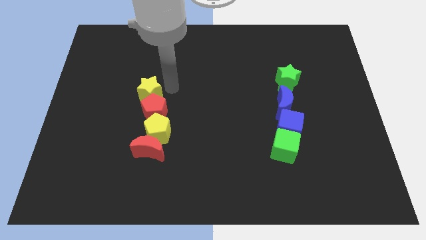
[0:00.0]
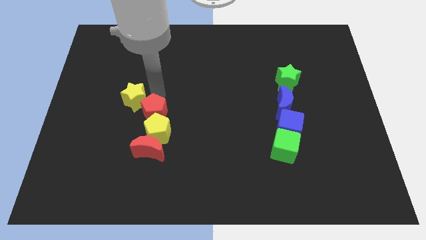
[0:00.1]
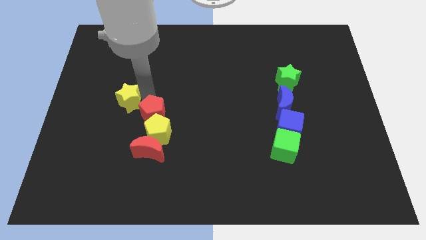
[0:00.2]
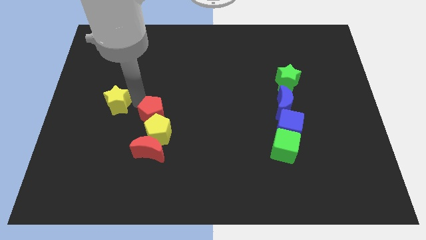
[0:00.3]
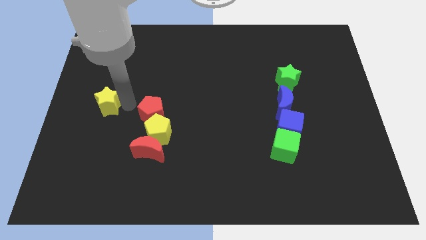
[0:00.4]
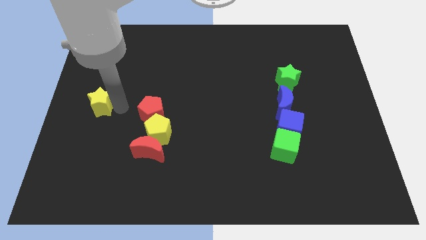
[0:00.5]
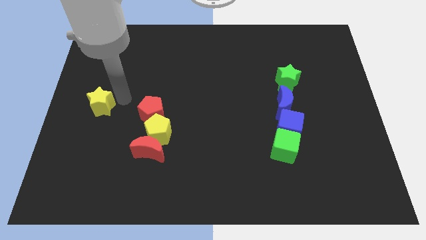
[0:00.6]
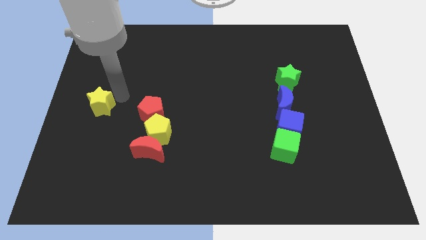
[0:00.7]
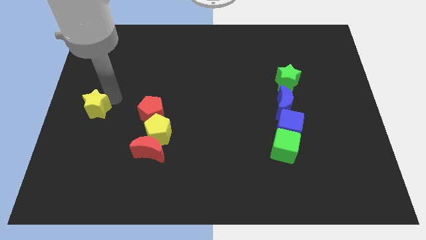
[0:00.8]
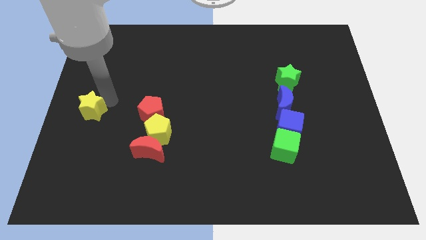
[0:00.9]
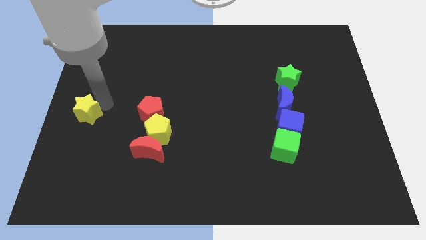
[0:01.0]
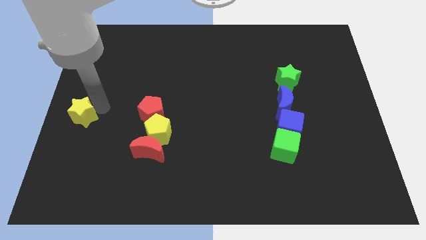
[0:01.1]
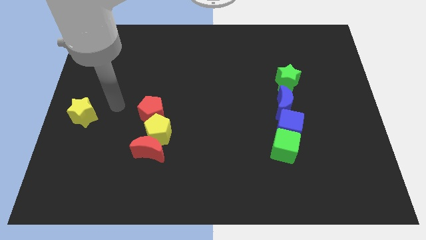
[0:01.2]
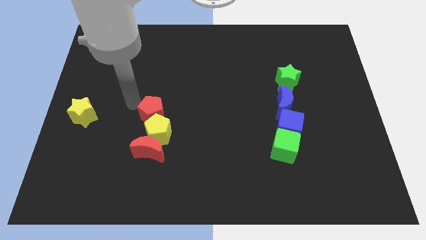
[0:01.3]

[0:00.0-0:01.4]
place the yellow star left to the red pentagon

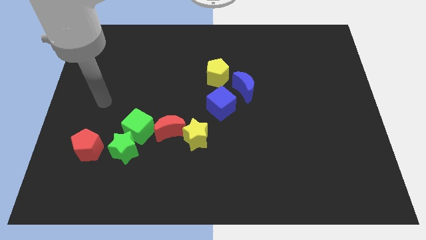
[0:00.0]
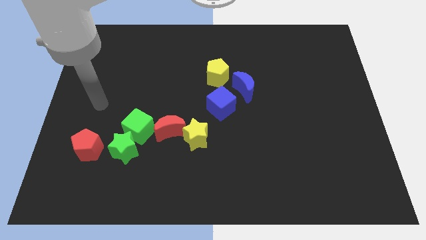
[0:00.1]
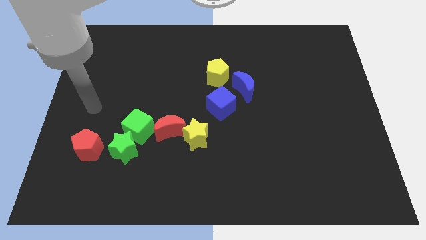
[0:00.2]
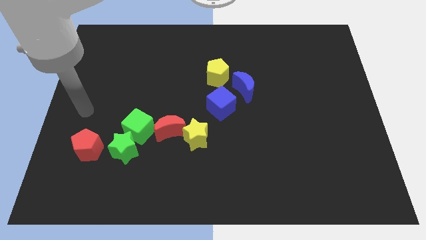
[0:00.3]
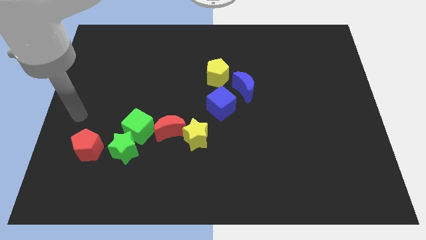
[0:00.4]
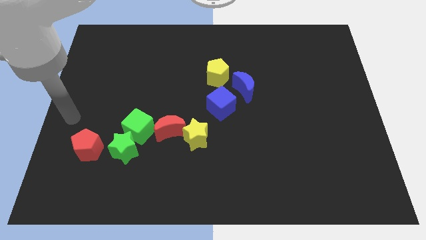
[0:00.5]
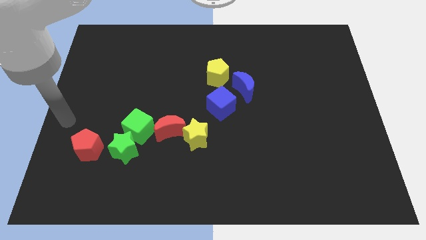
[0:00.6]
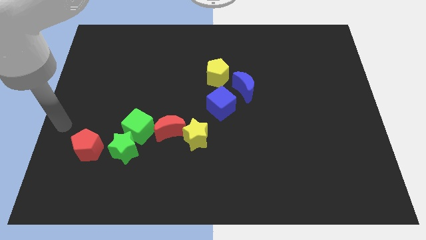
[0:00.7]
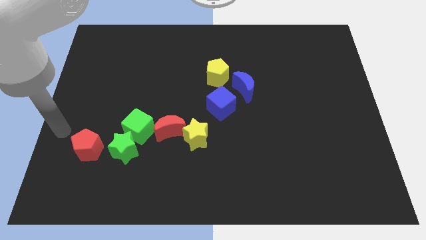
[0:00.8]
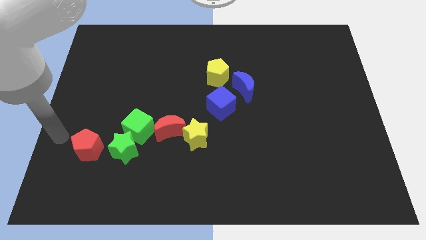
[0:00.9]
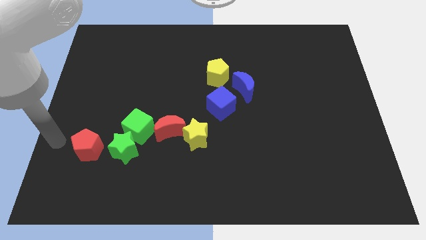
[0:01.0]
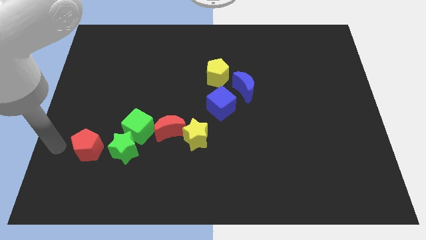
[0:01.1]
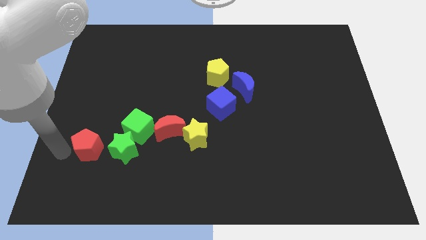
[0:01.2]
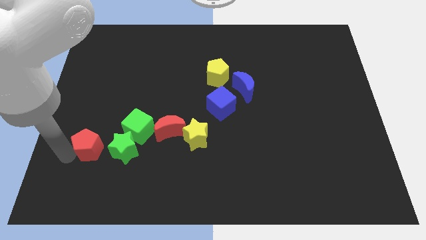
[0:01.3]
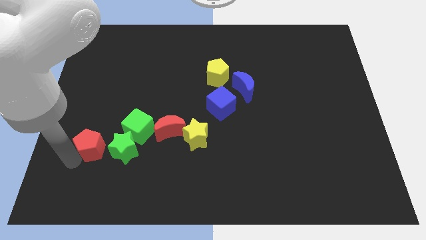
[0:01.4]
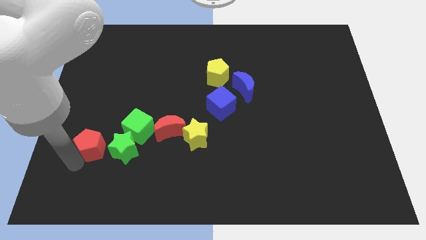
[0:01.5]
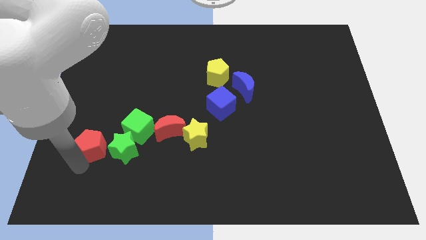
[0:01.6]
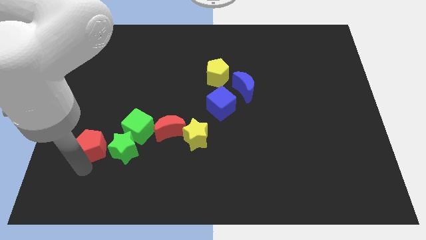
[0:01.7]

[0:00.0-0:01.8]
slightly push the red pentagon to the left of the green star

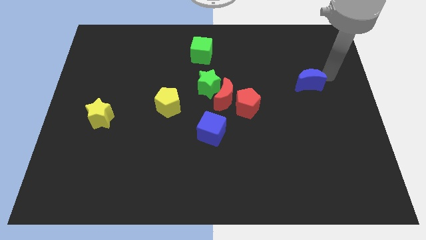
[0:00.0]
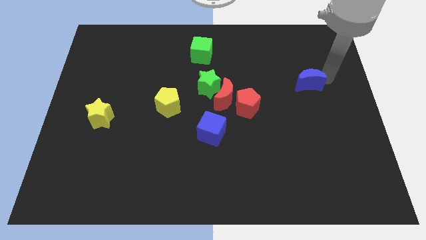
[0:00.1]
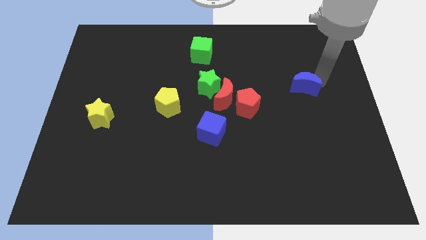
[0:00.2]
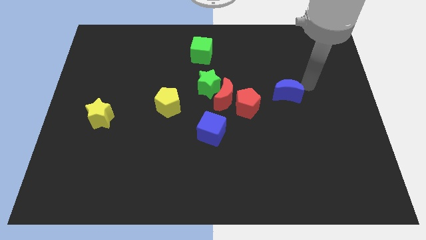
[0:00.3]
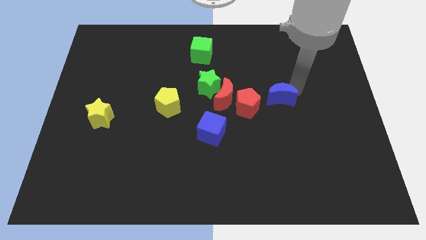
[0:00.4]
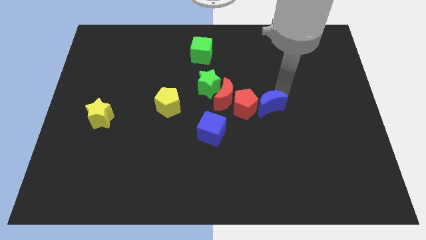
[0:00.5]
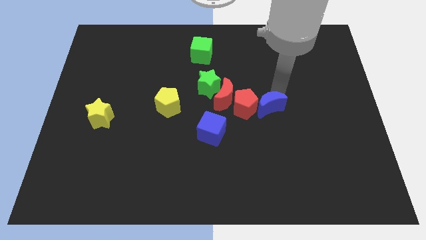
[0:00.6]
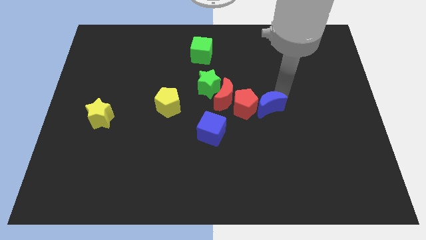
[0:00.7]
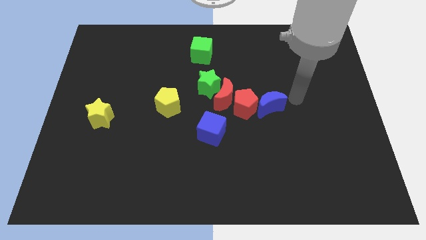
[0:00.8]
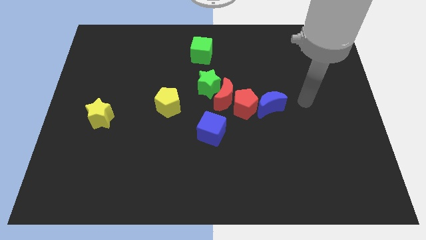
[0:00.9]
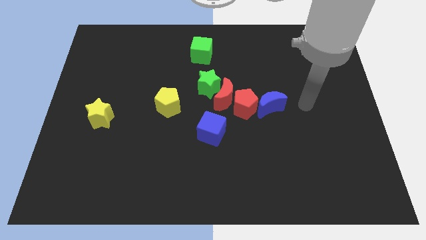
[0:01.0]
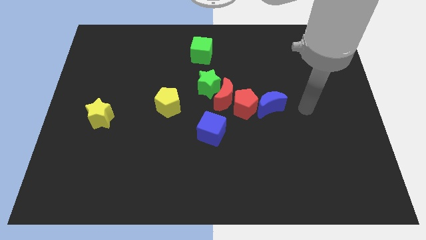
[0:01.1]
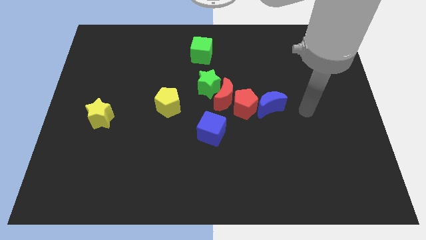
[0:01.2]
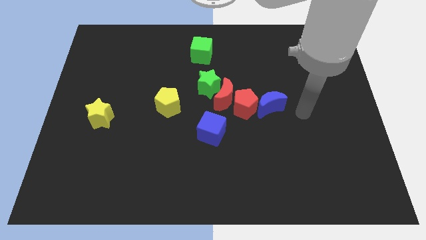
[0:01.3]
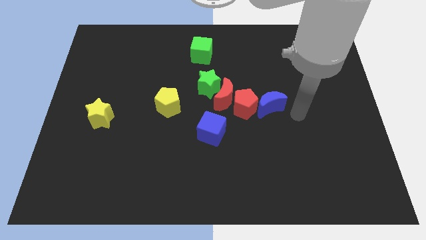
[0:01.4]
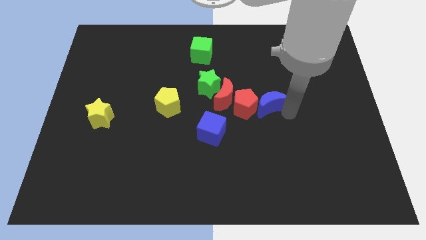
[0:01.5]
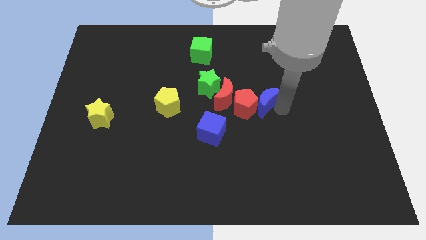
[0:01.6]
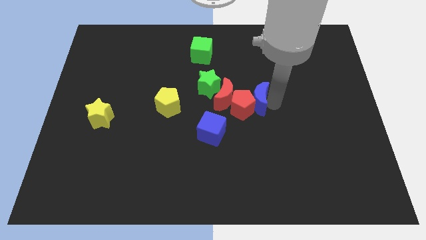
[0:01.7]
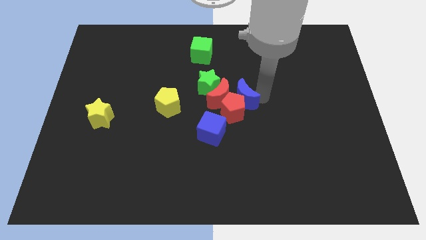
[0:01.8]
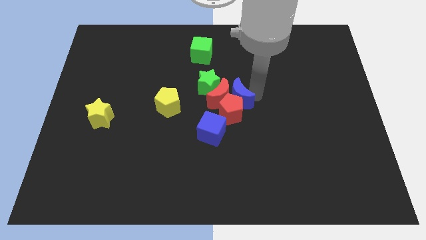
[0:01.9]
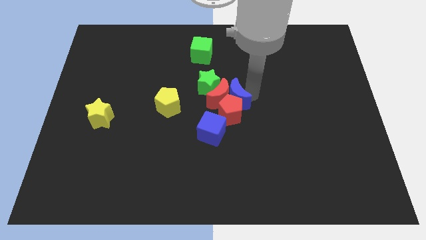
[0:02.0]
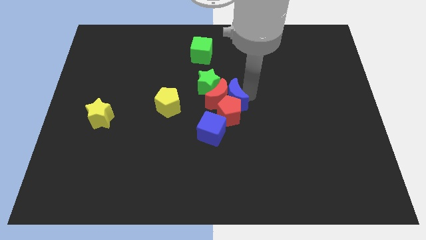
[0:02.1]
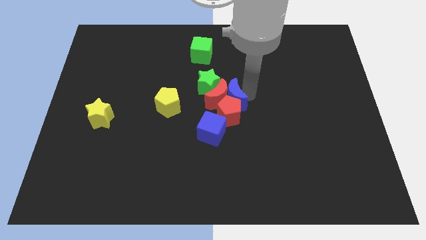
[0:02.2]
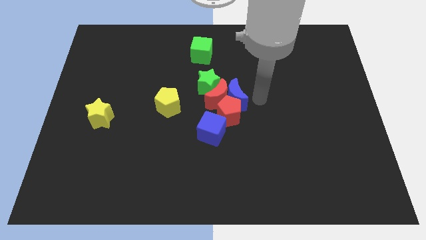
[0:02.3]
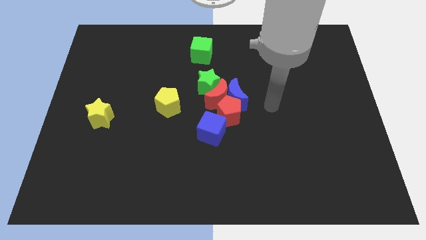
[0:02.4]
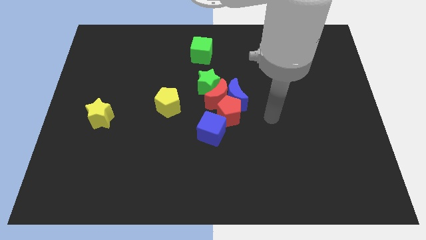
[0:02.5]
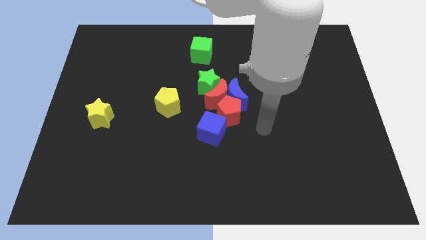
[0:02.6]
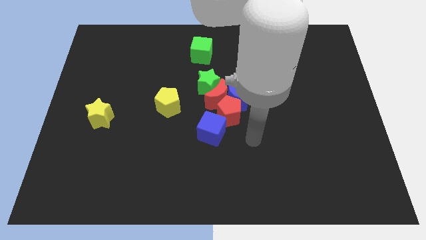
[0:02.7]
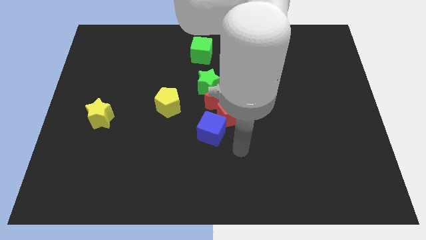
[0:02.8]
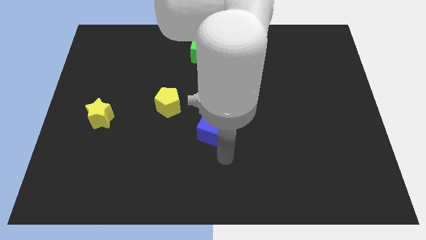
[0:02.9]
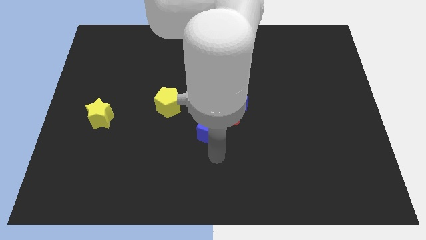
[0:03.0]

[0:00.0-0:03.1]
push the blue crescent into the red crescent

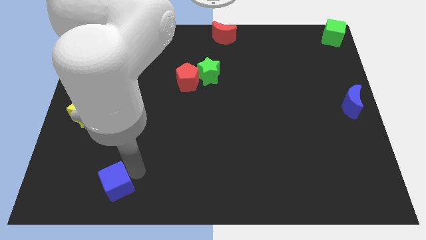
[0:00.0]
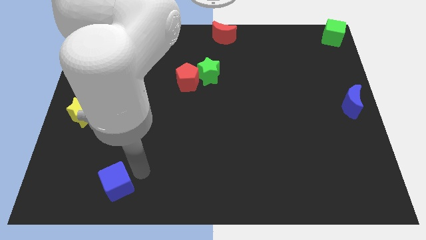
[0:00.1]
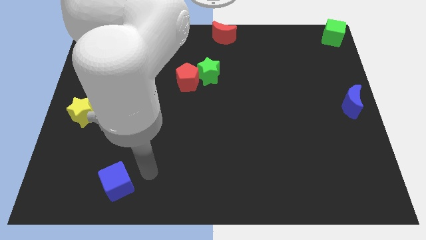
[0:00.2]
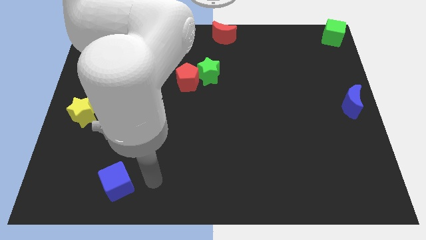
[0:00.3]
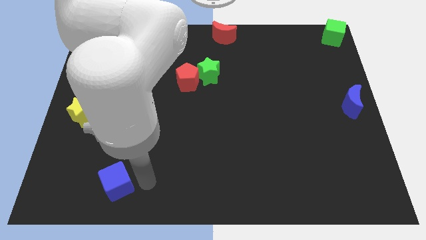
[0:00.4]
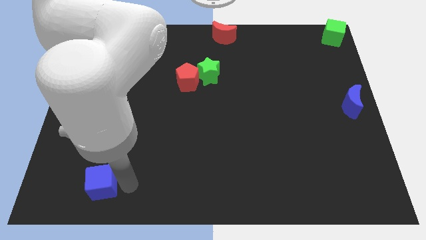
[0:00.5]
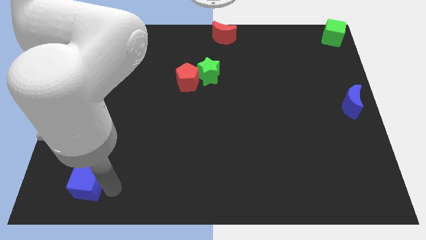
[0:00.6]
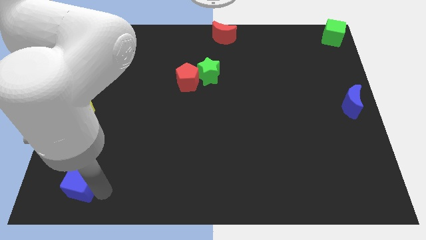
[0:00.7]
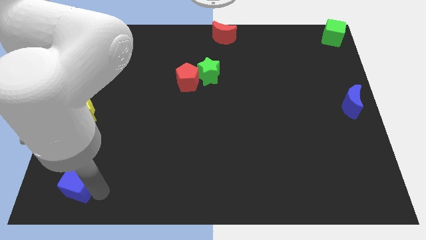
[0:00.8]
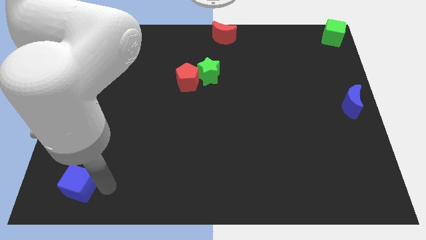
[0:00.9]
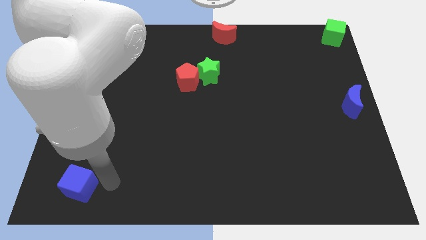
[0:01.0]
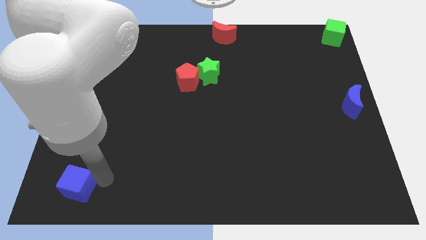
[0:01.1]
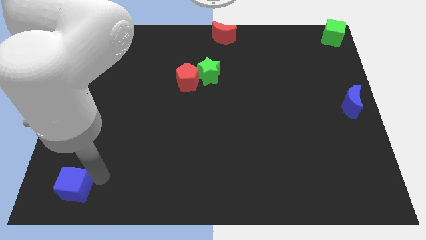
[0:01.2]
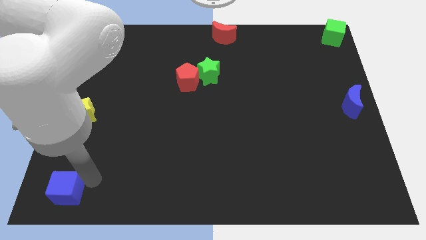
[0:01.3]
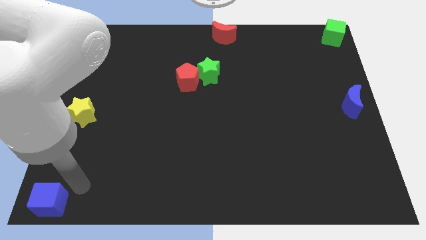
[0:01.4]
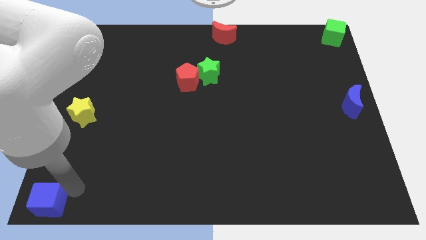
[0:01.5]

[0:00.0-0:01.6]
move the blue cube to the bottom left to the board

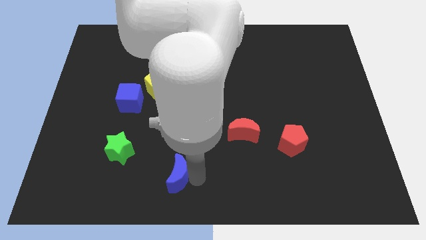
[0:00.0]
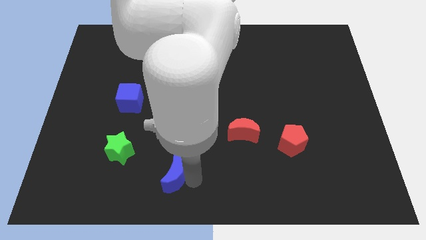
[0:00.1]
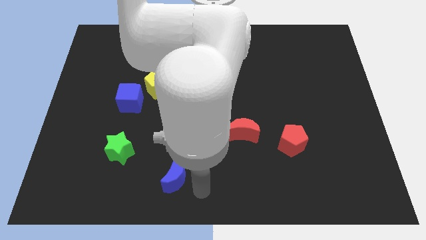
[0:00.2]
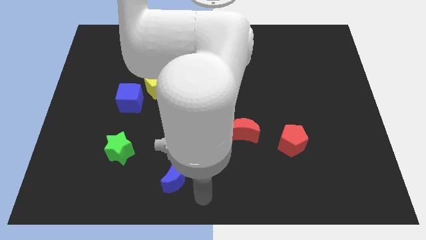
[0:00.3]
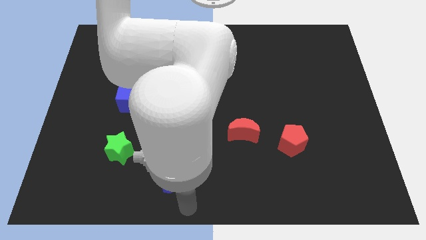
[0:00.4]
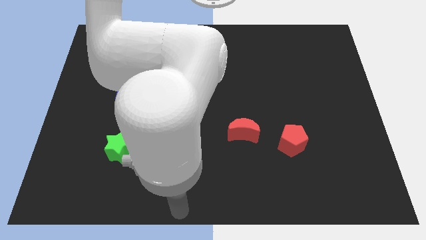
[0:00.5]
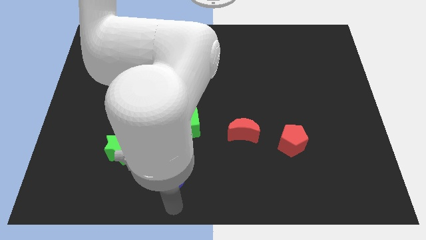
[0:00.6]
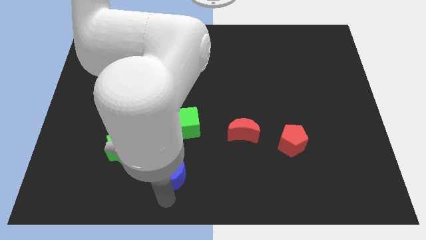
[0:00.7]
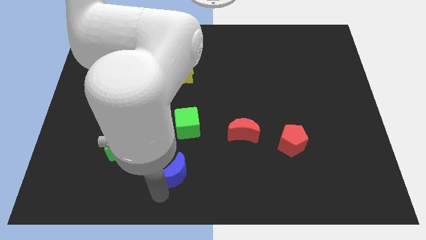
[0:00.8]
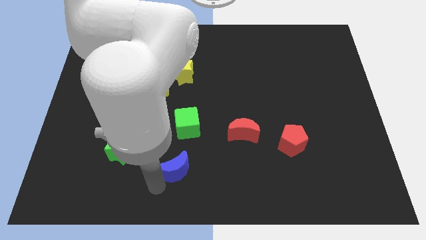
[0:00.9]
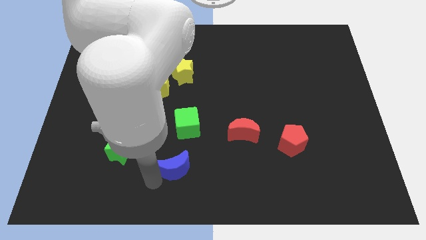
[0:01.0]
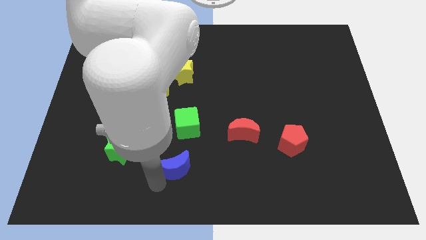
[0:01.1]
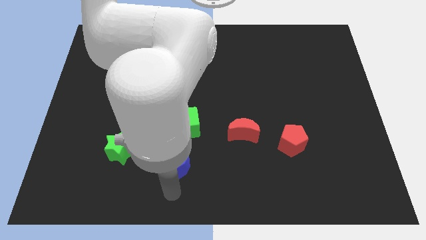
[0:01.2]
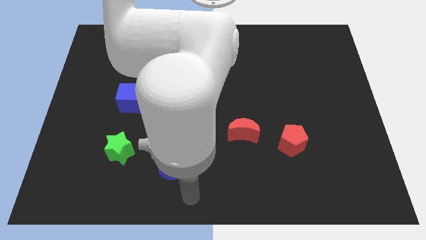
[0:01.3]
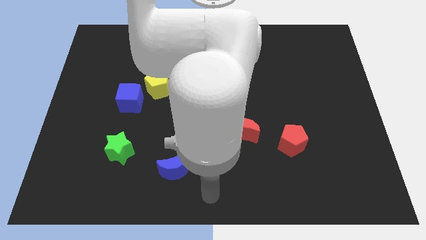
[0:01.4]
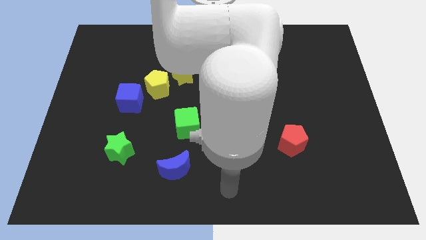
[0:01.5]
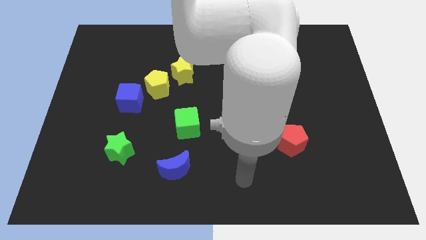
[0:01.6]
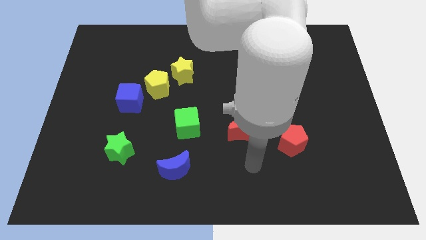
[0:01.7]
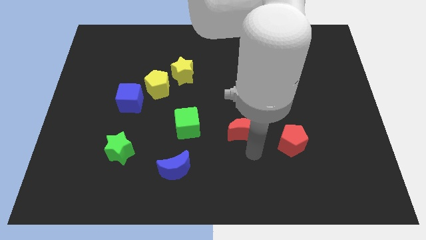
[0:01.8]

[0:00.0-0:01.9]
adjust the blue crescent slightly upwards to the green cube
